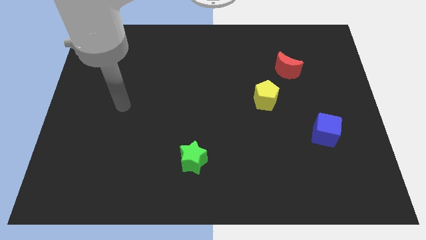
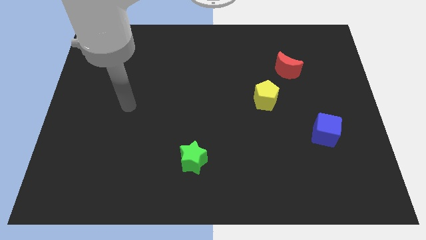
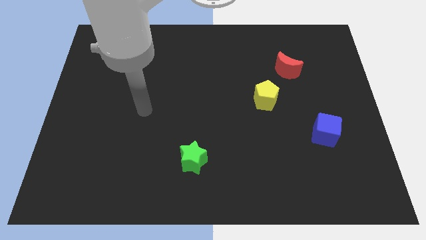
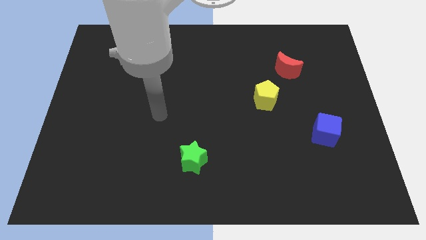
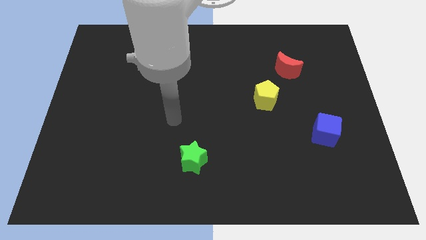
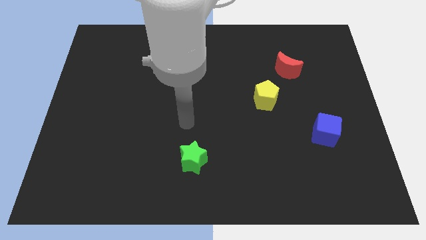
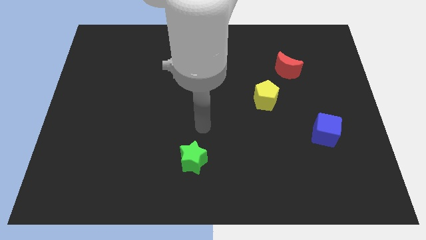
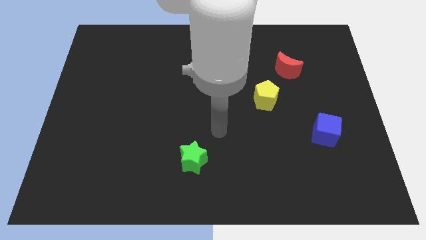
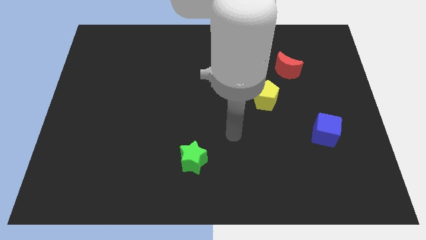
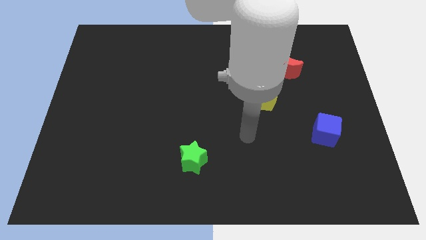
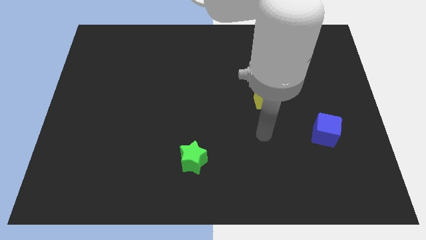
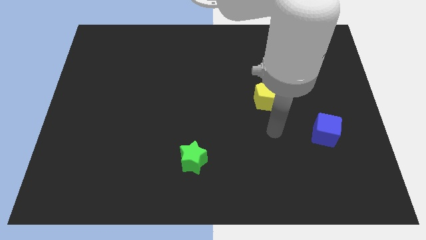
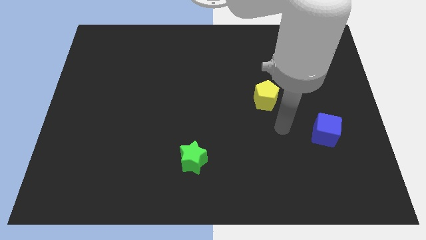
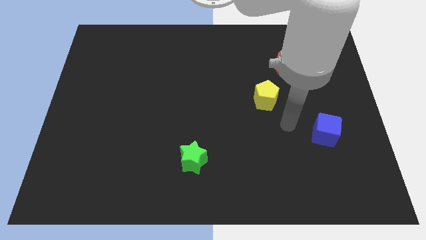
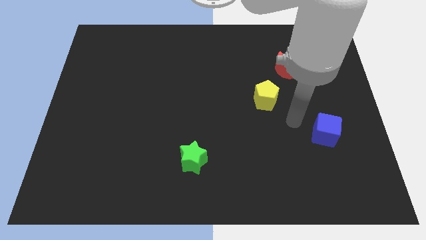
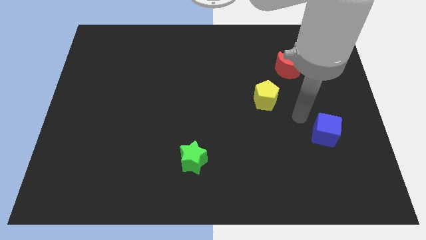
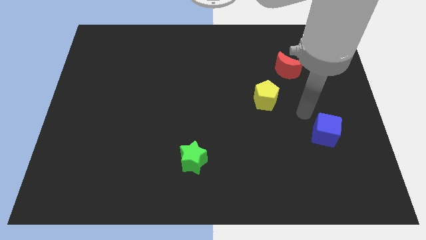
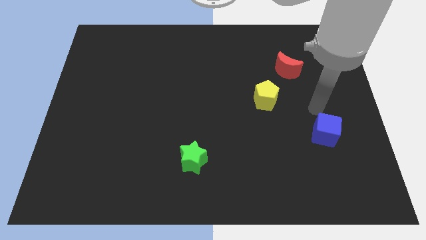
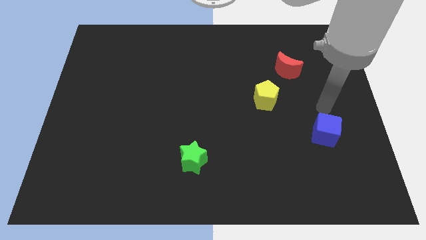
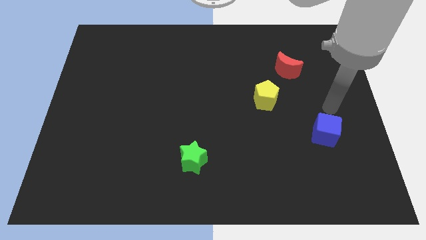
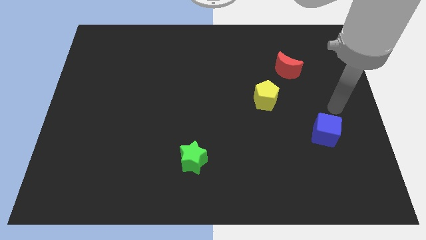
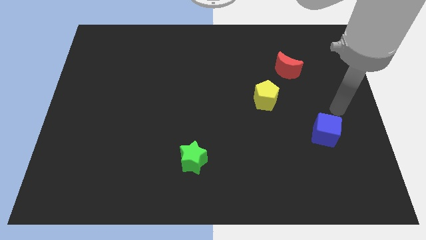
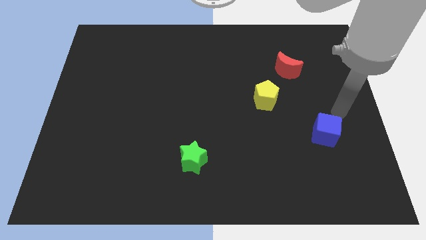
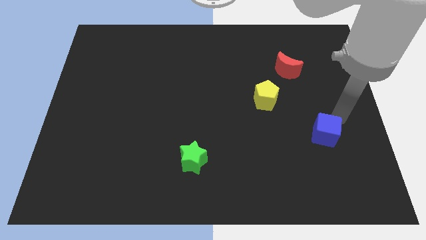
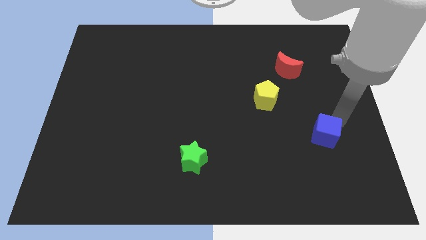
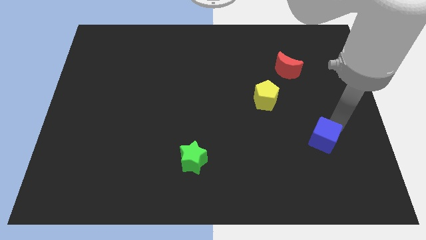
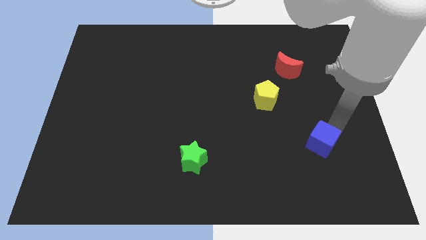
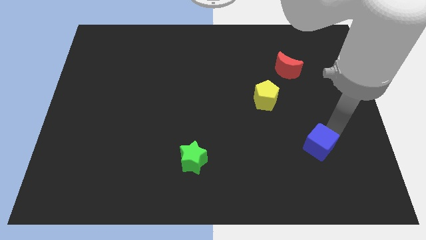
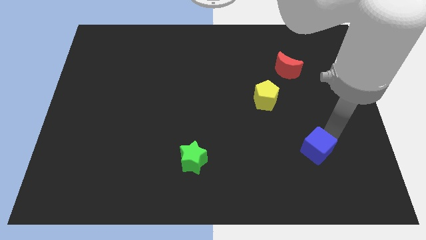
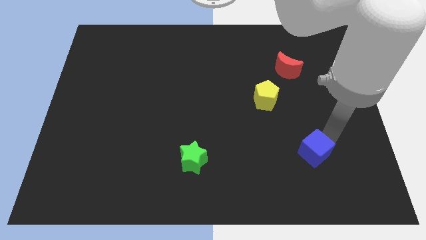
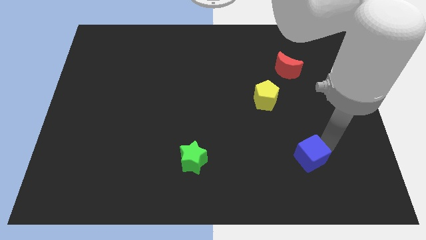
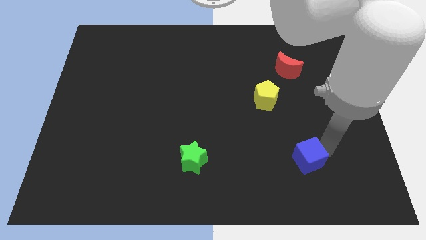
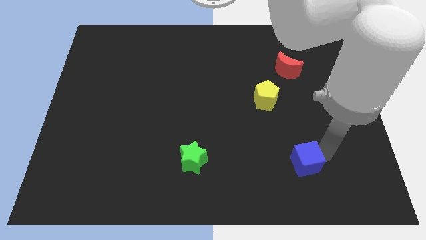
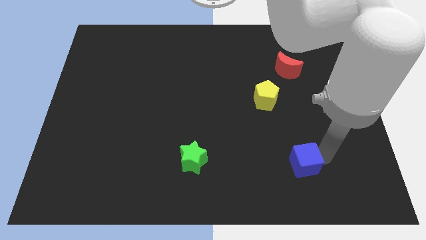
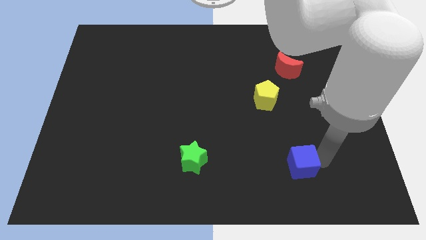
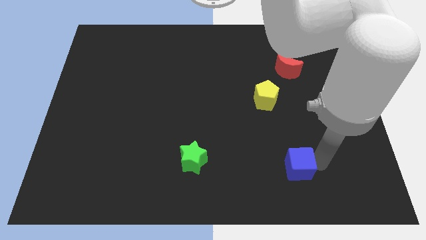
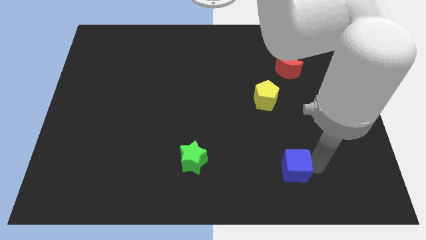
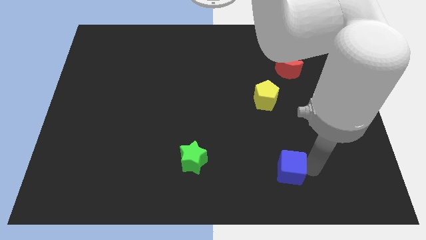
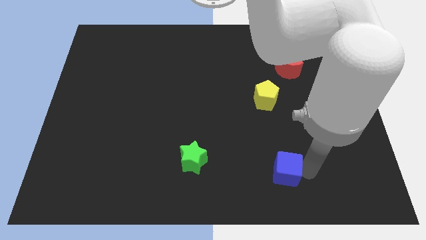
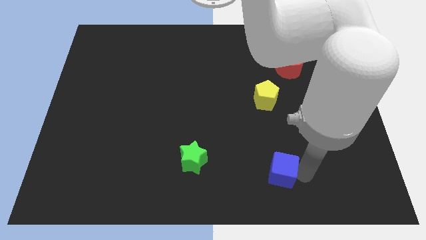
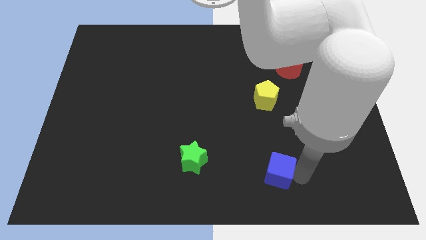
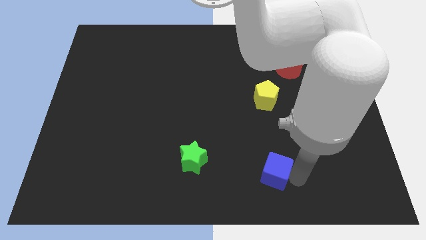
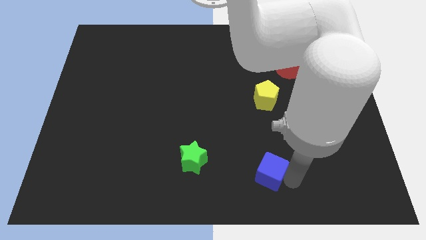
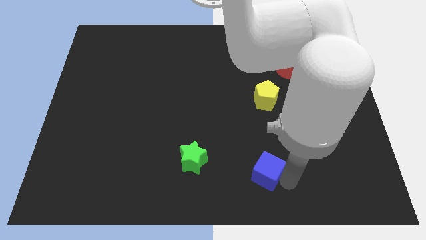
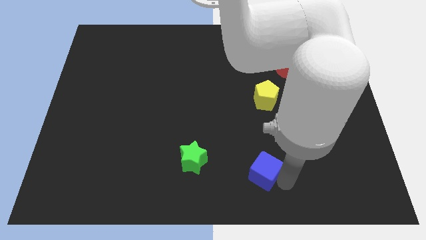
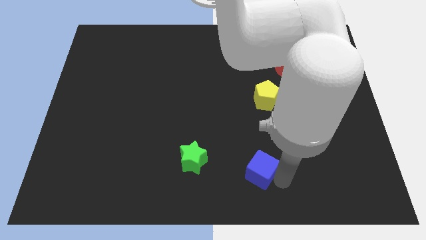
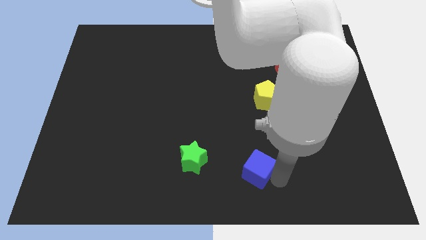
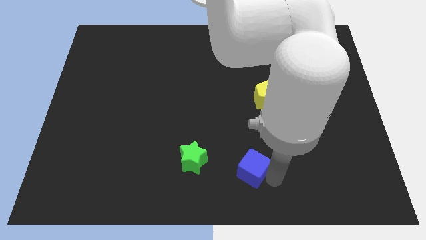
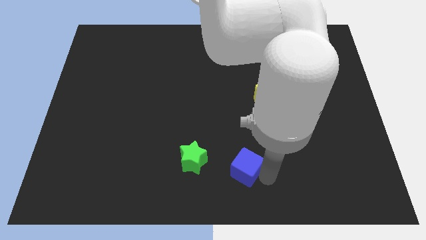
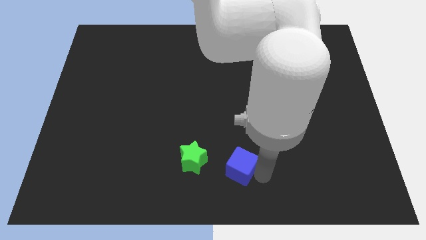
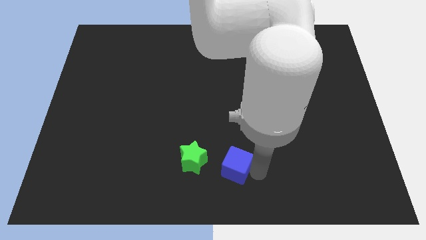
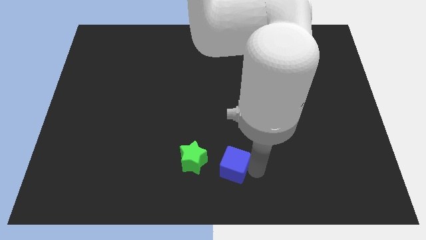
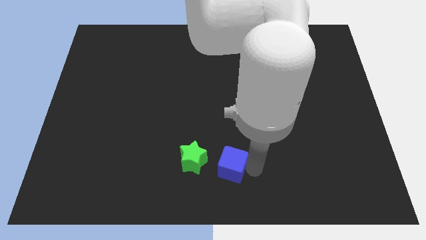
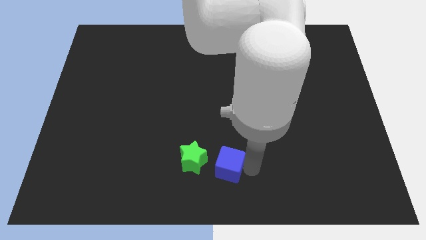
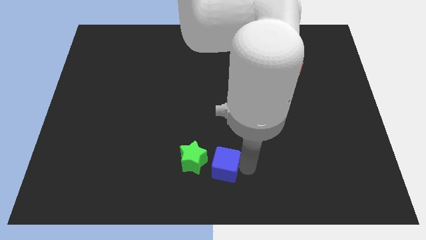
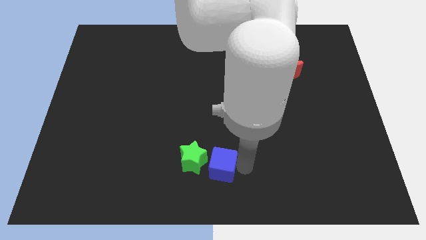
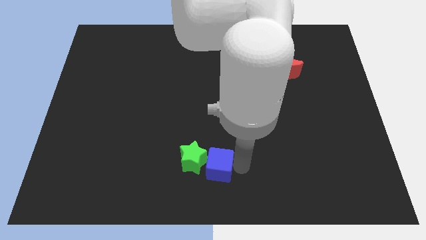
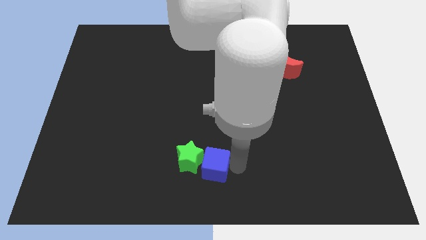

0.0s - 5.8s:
slide the blue cube close to the star

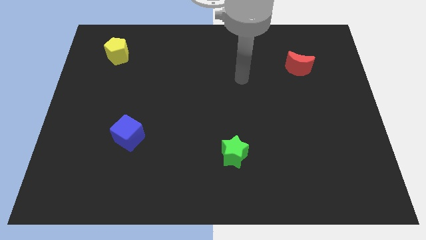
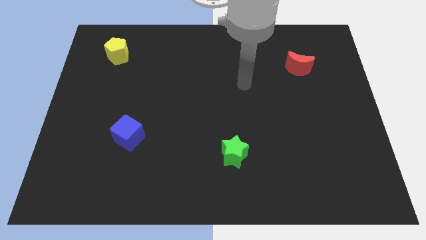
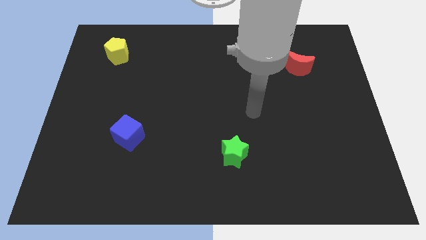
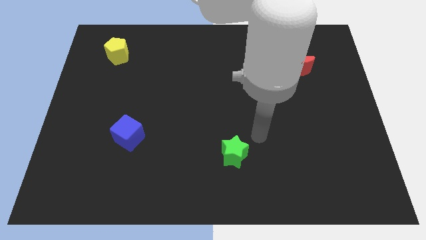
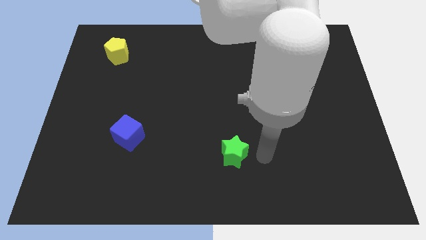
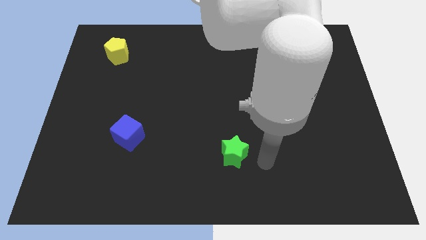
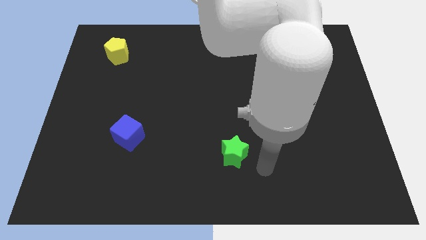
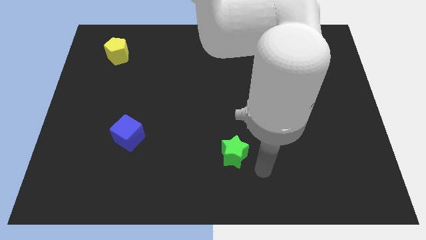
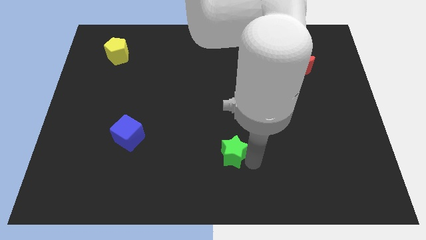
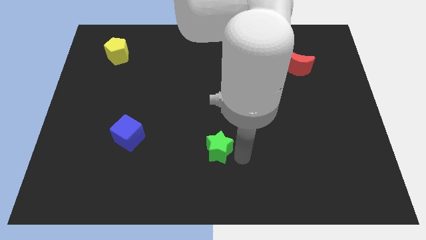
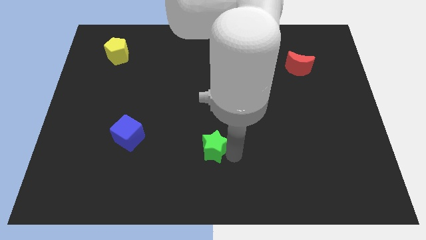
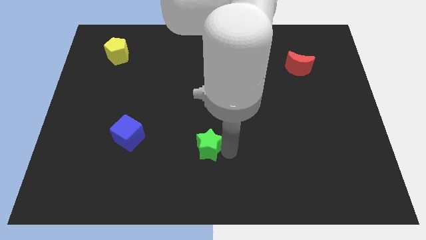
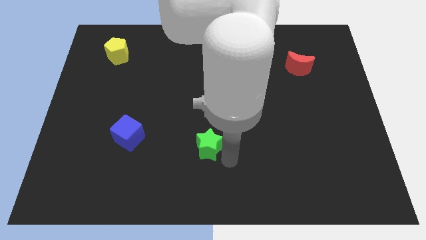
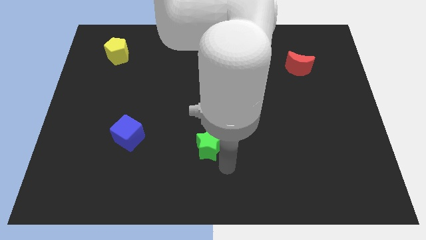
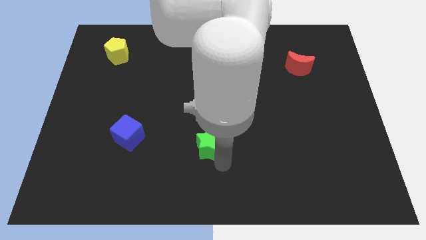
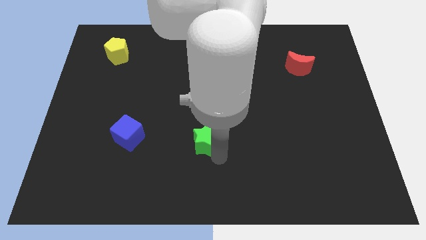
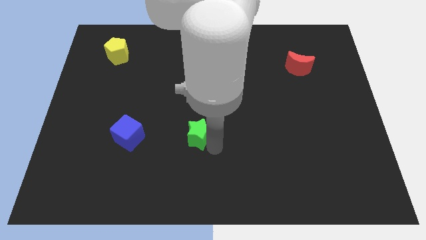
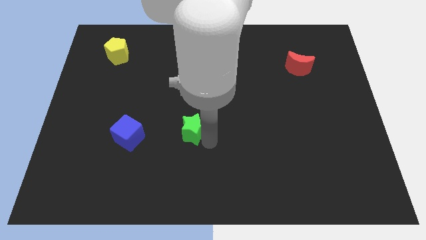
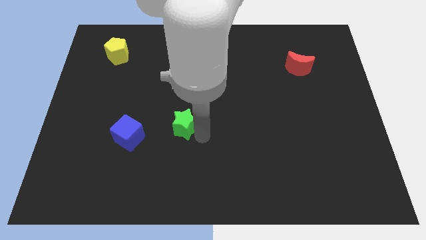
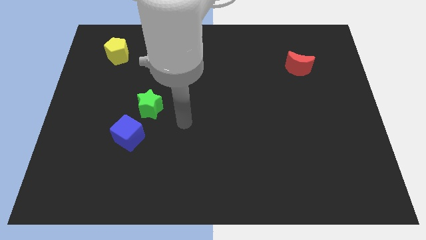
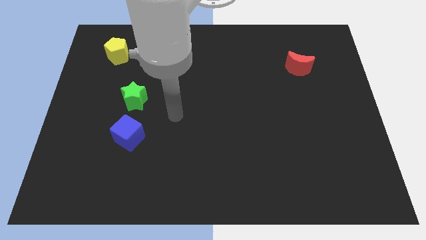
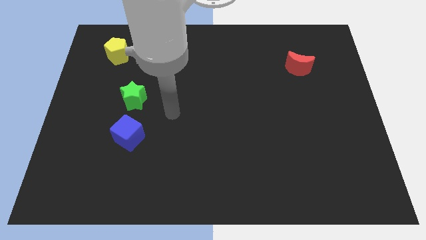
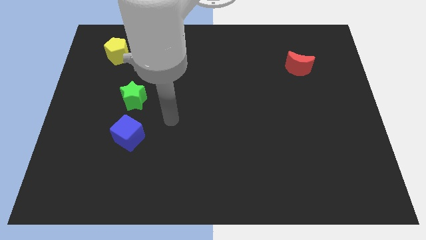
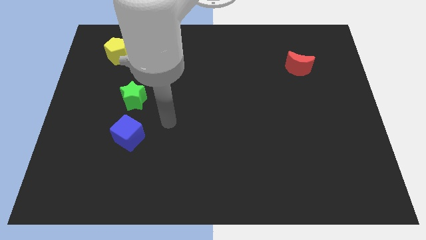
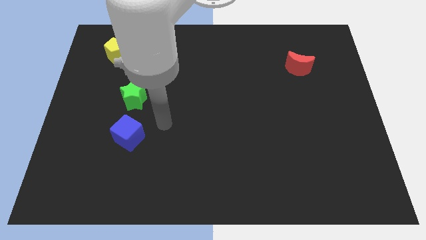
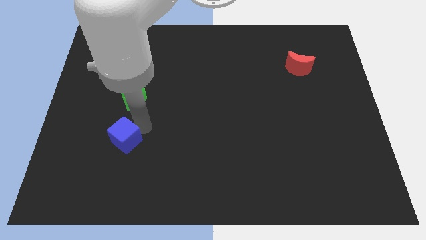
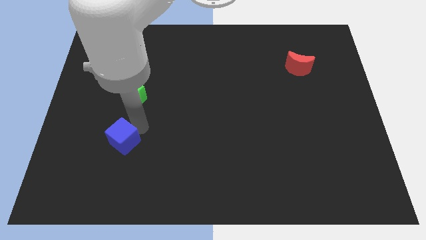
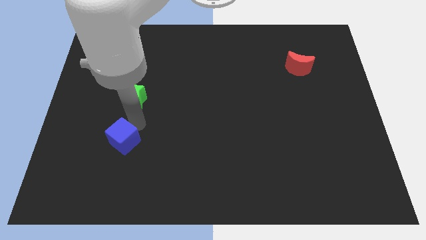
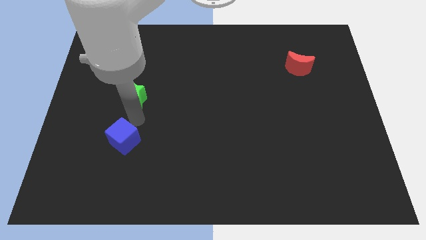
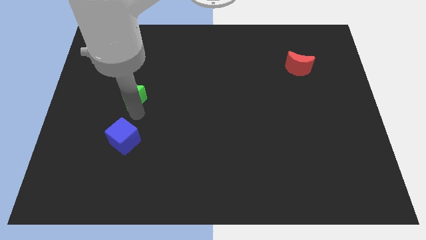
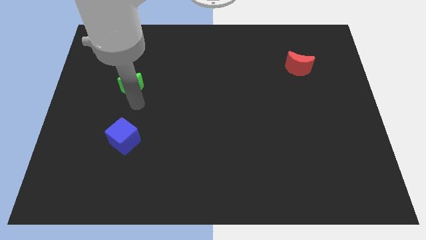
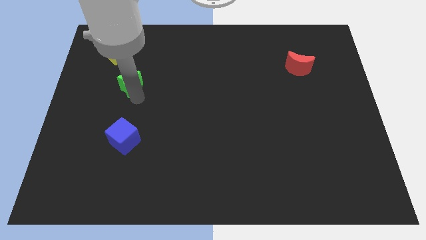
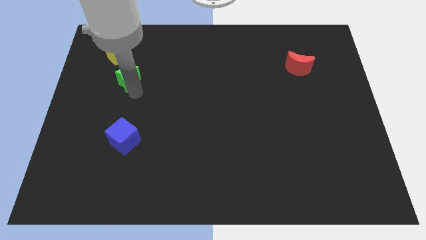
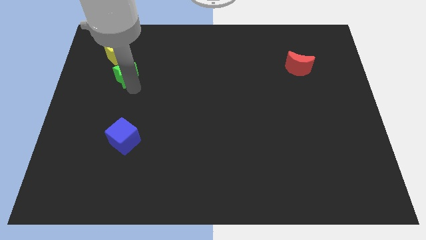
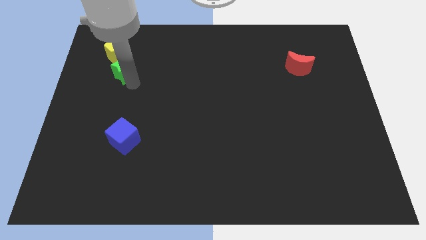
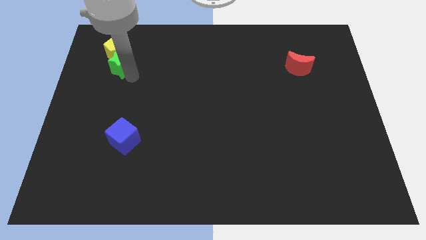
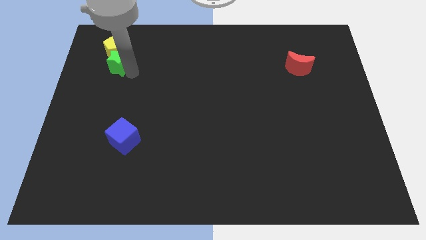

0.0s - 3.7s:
slide the star to the pentagon
